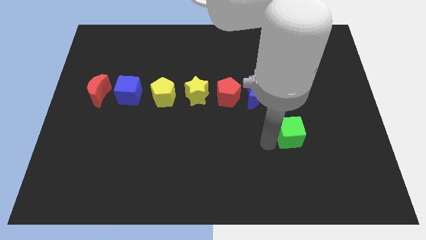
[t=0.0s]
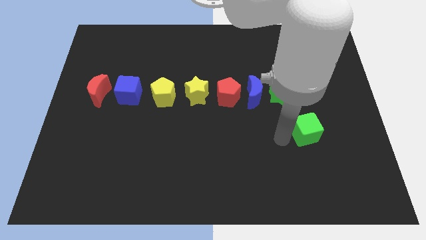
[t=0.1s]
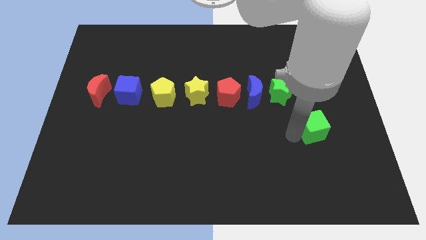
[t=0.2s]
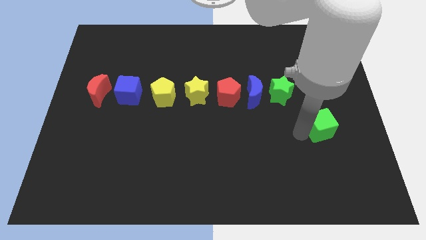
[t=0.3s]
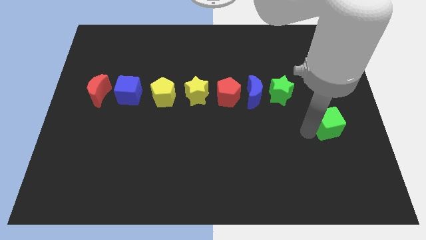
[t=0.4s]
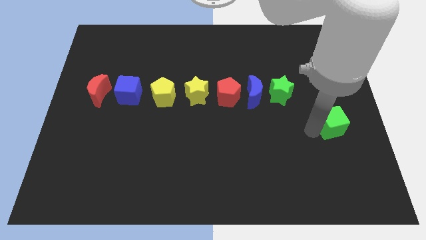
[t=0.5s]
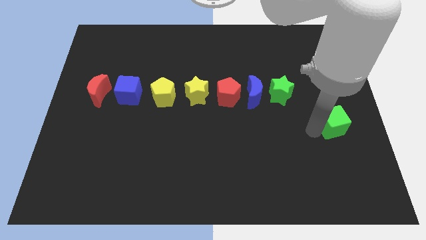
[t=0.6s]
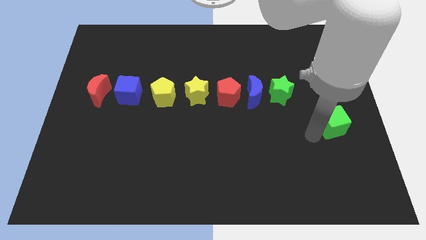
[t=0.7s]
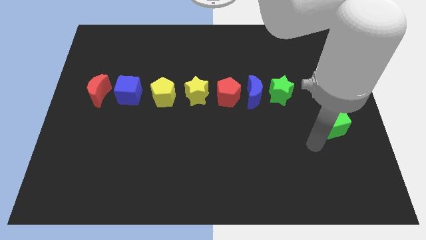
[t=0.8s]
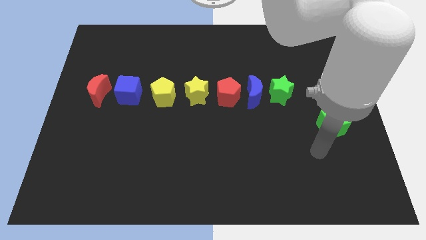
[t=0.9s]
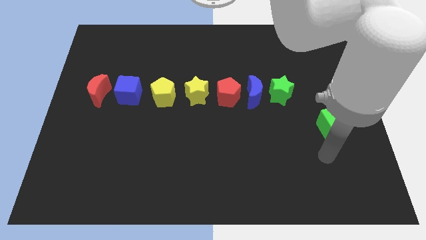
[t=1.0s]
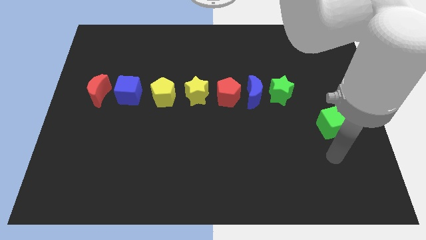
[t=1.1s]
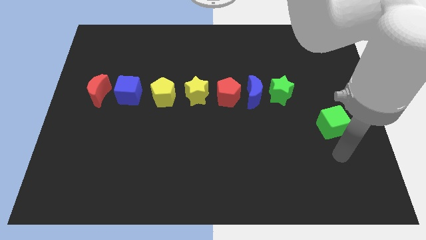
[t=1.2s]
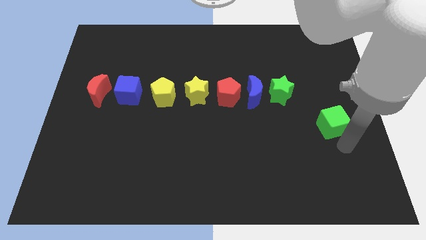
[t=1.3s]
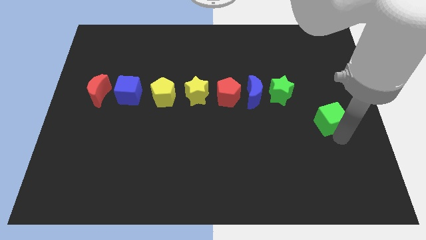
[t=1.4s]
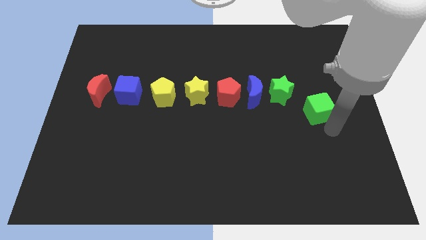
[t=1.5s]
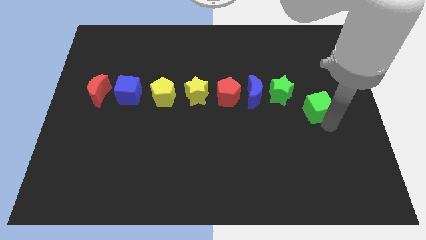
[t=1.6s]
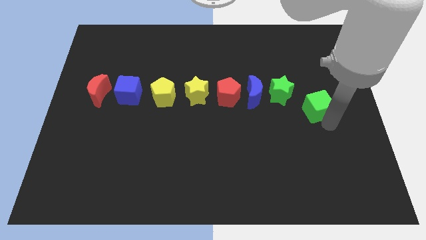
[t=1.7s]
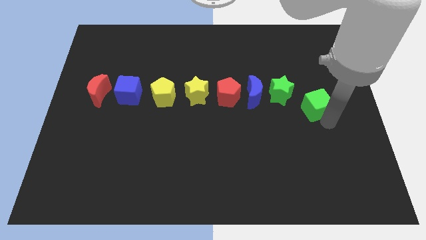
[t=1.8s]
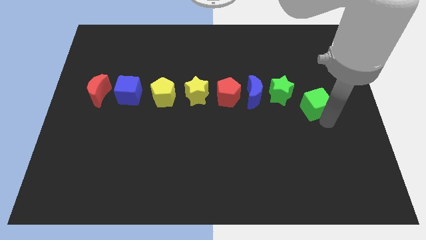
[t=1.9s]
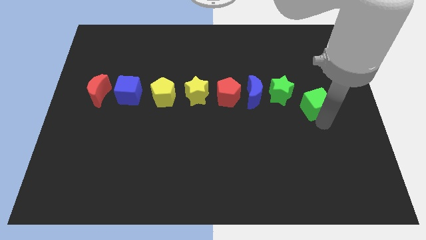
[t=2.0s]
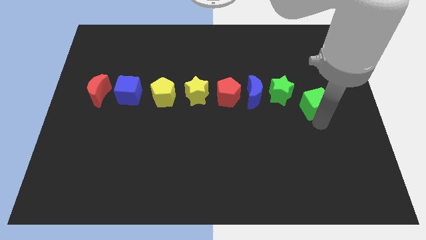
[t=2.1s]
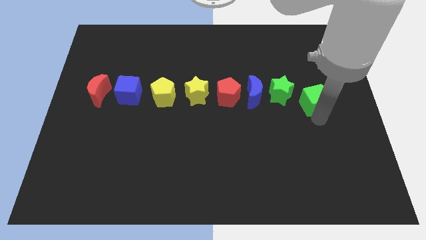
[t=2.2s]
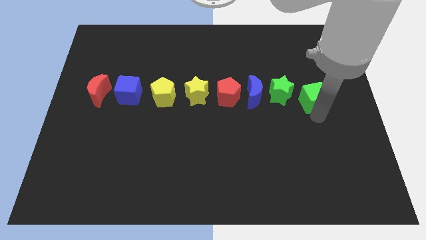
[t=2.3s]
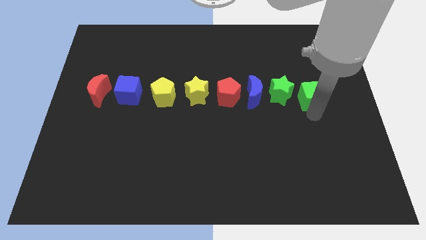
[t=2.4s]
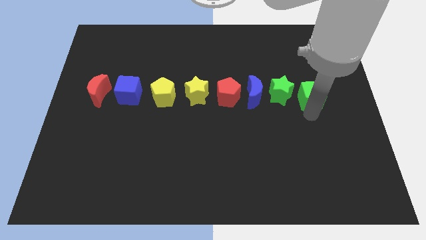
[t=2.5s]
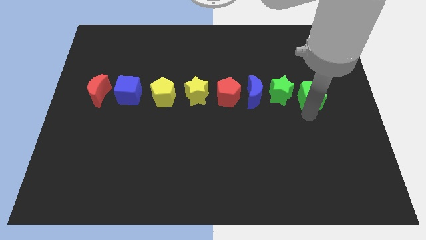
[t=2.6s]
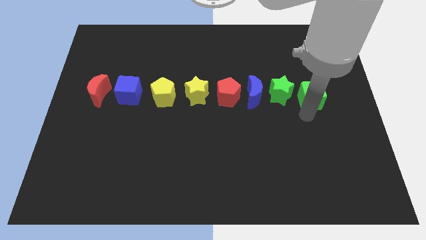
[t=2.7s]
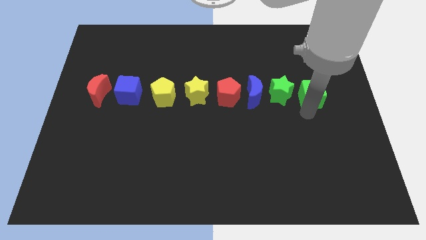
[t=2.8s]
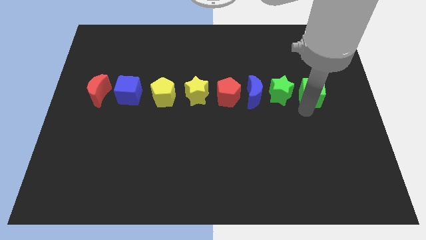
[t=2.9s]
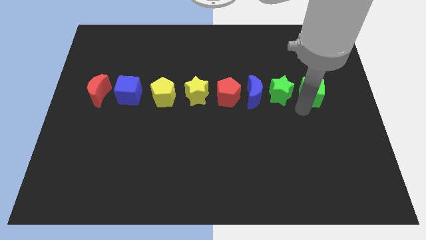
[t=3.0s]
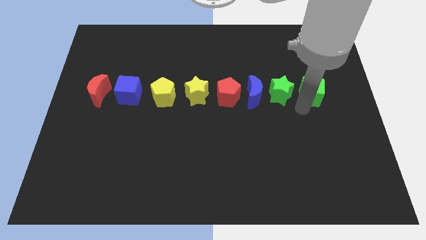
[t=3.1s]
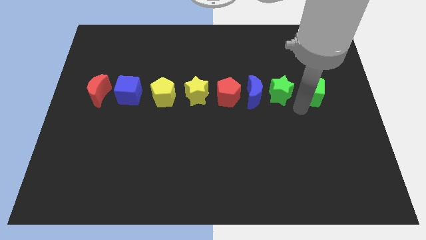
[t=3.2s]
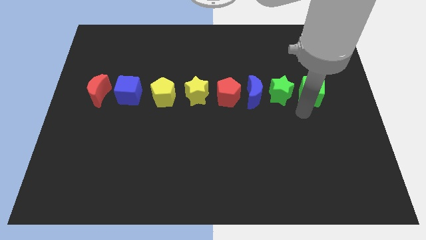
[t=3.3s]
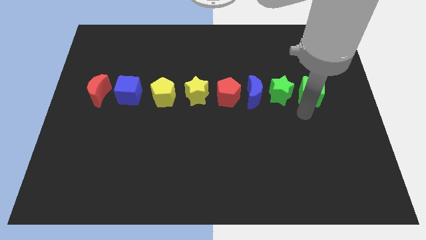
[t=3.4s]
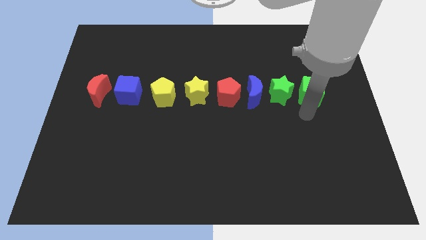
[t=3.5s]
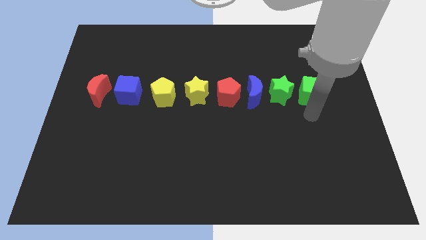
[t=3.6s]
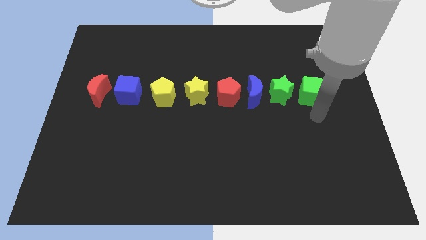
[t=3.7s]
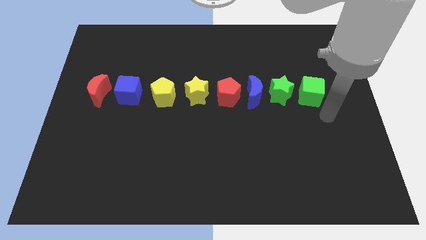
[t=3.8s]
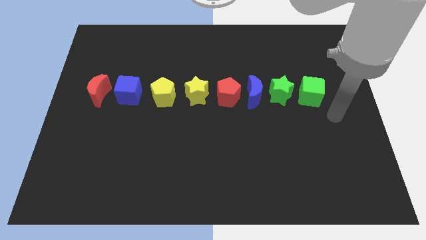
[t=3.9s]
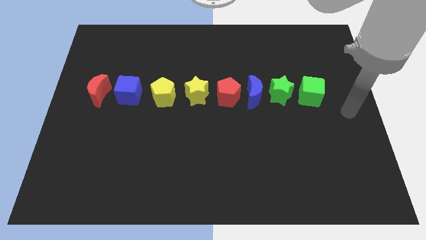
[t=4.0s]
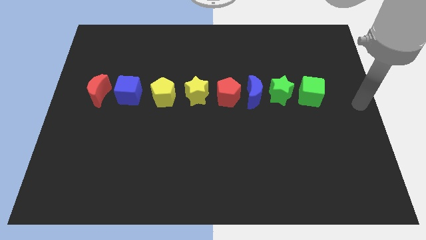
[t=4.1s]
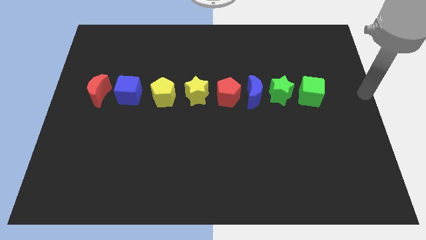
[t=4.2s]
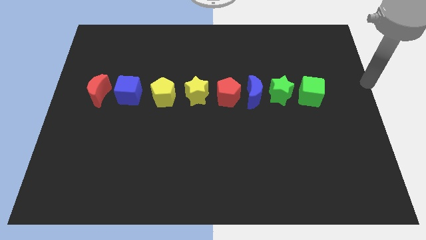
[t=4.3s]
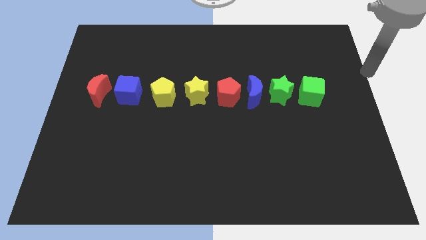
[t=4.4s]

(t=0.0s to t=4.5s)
put the green cube to the right of the green star

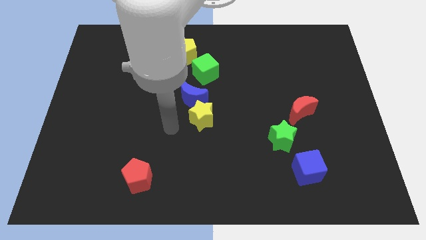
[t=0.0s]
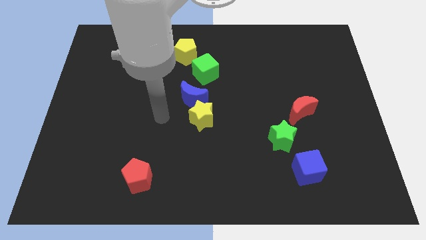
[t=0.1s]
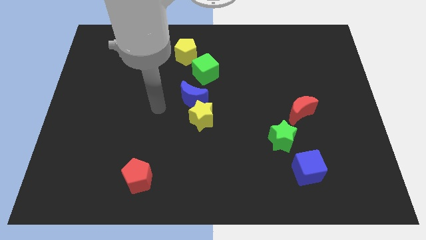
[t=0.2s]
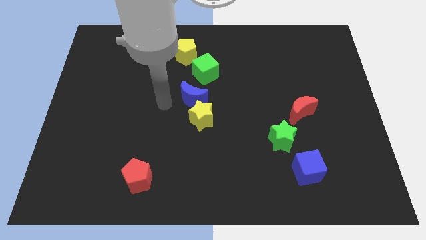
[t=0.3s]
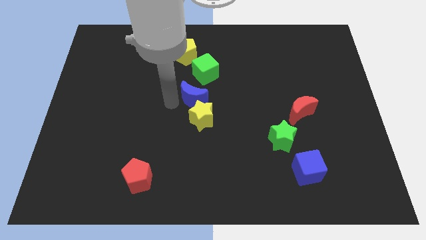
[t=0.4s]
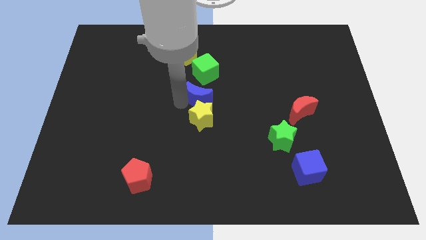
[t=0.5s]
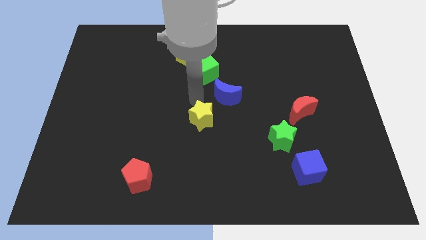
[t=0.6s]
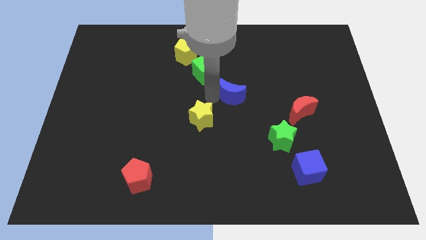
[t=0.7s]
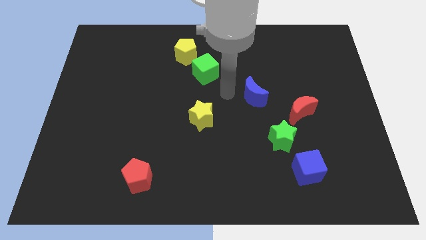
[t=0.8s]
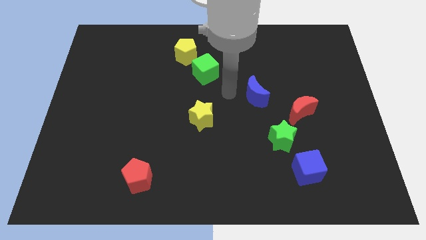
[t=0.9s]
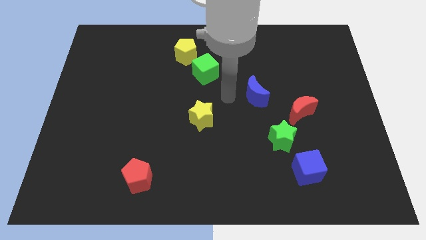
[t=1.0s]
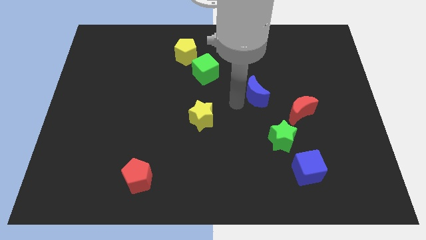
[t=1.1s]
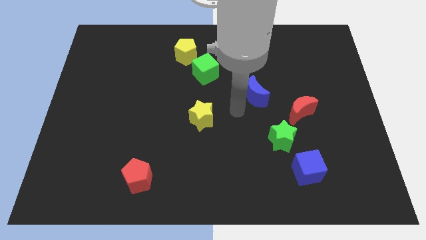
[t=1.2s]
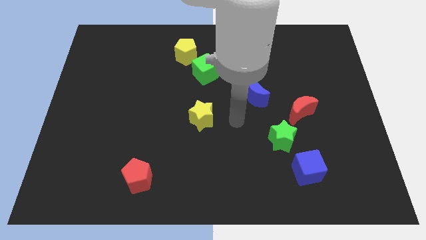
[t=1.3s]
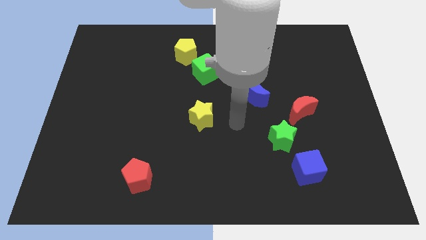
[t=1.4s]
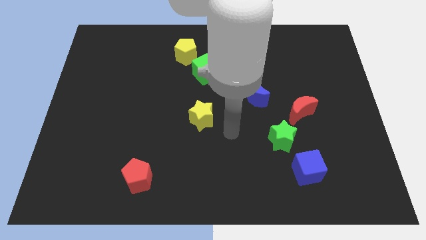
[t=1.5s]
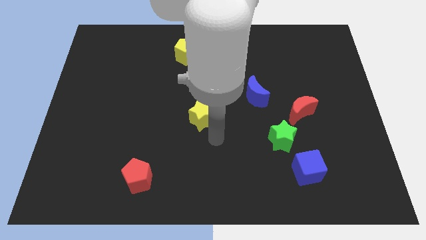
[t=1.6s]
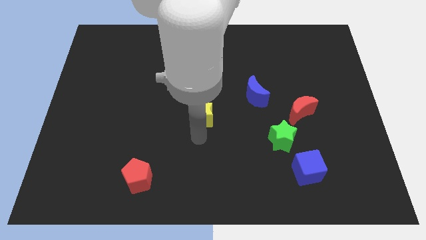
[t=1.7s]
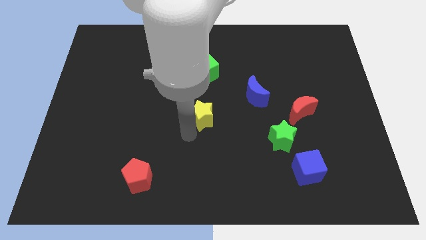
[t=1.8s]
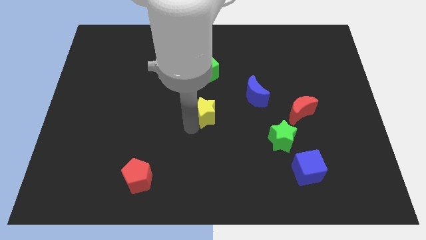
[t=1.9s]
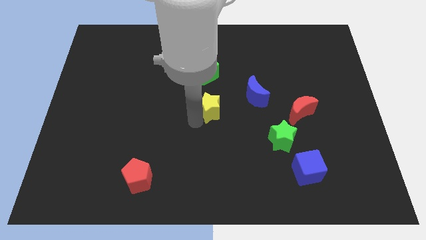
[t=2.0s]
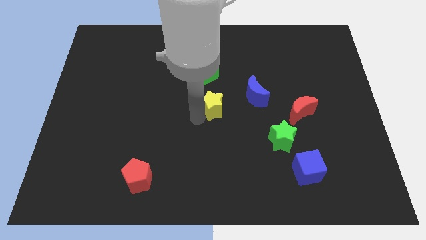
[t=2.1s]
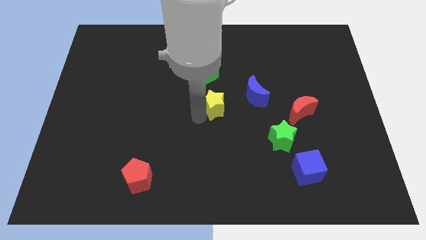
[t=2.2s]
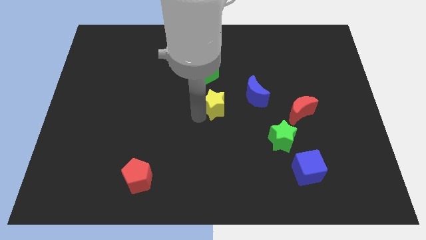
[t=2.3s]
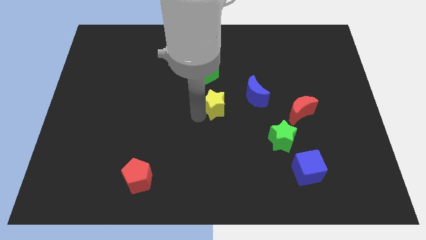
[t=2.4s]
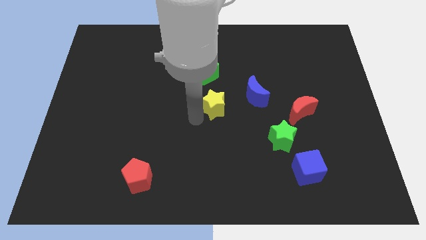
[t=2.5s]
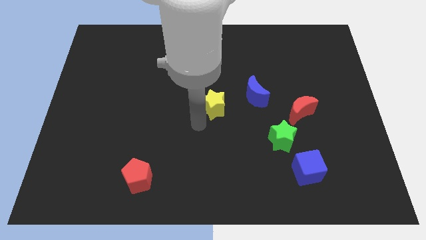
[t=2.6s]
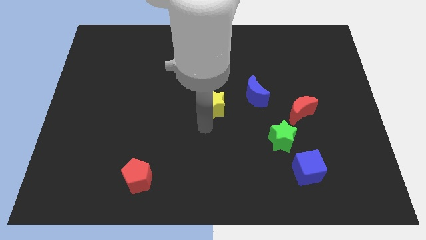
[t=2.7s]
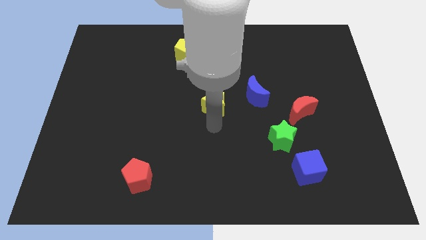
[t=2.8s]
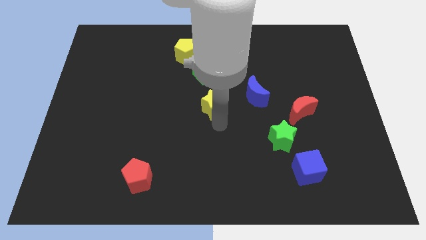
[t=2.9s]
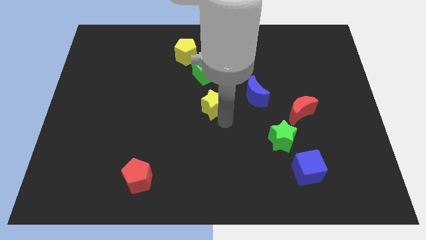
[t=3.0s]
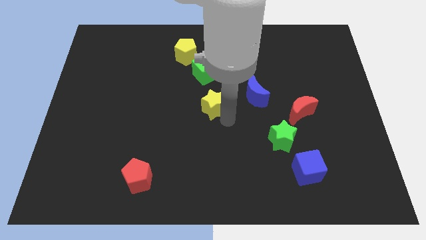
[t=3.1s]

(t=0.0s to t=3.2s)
push the yellow star towards the left side of the blue moon

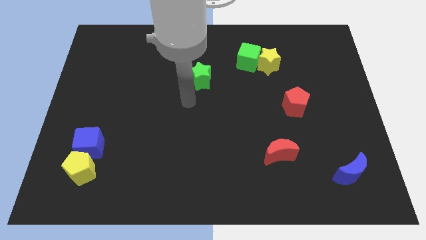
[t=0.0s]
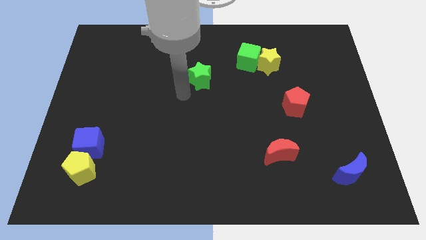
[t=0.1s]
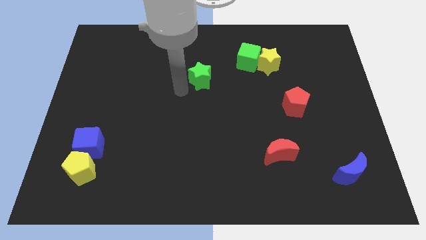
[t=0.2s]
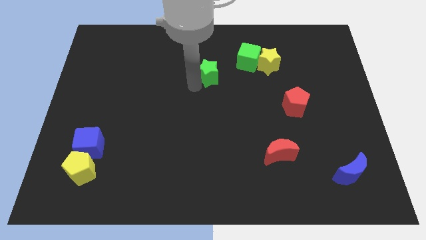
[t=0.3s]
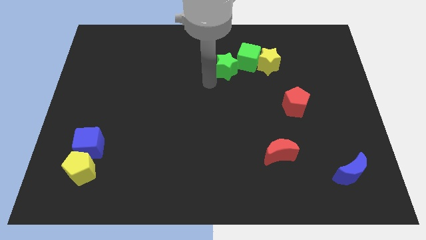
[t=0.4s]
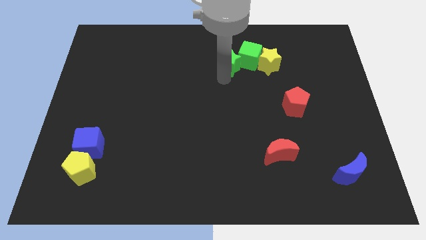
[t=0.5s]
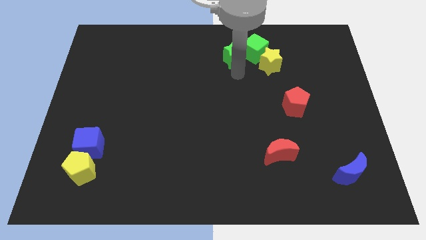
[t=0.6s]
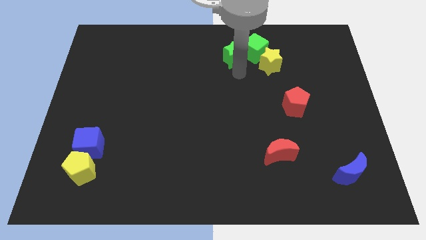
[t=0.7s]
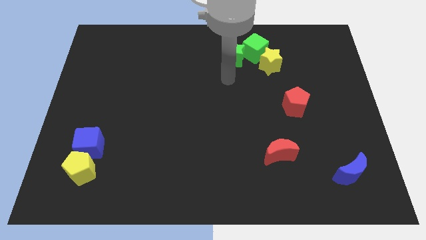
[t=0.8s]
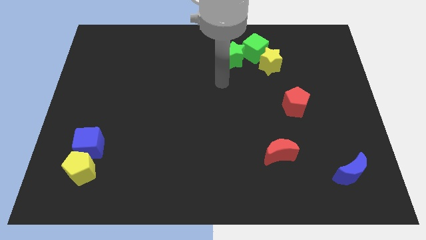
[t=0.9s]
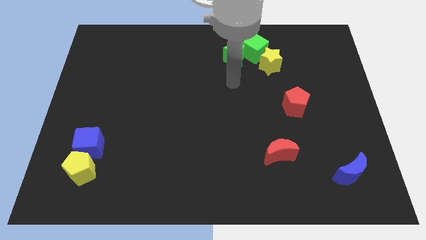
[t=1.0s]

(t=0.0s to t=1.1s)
push the green star into the green cube

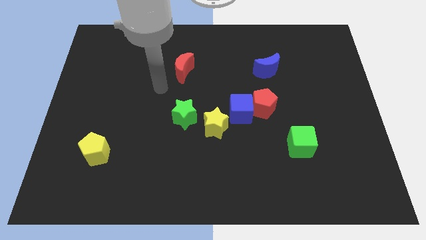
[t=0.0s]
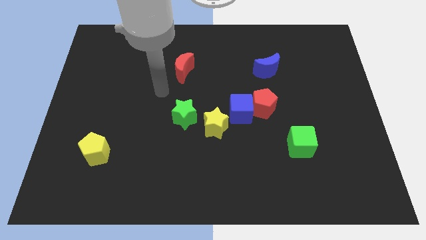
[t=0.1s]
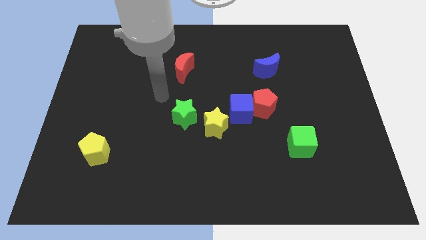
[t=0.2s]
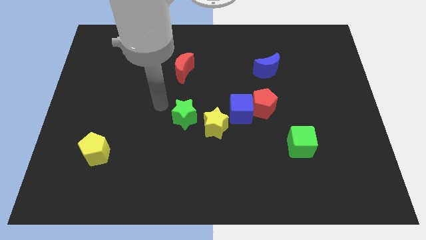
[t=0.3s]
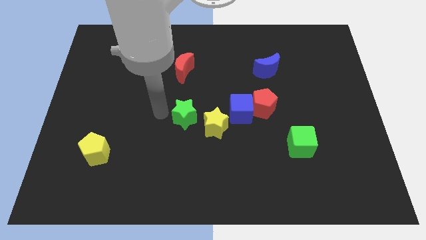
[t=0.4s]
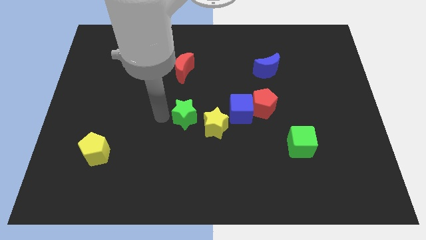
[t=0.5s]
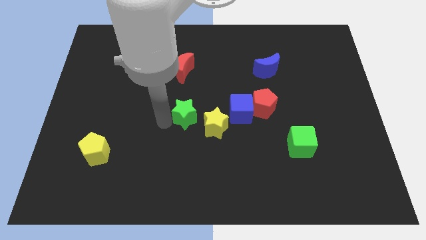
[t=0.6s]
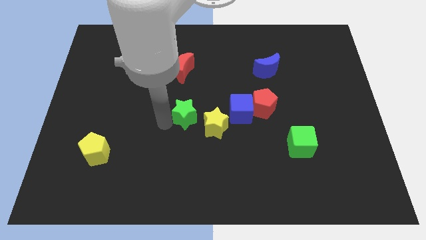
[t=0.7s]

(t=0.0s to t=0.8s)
point your arm left to green star
